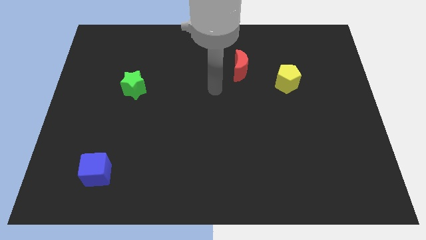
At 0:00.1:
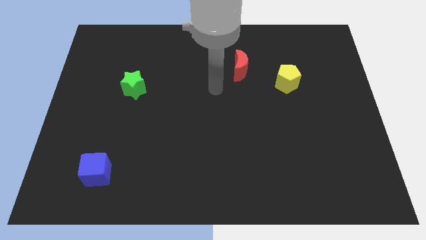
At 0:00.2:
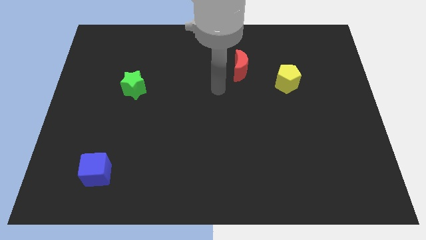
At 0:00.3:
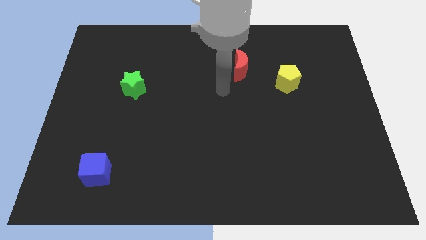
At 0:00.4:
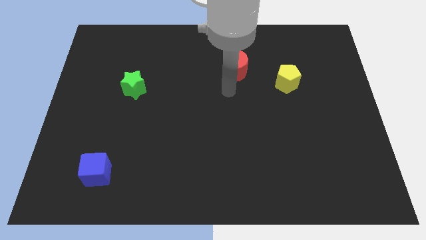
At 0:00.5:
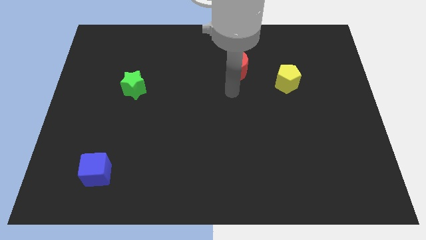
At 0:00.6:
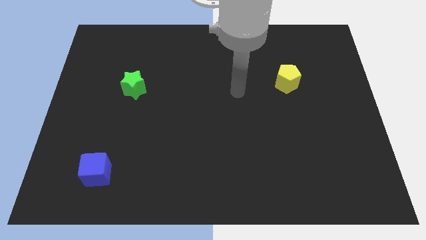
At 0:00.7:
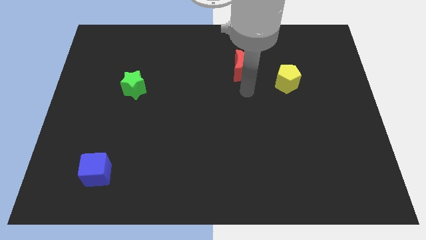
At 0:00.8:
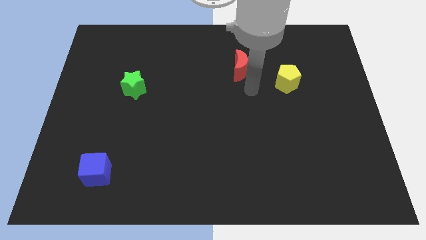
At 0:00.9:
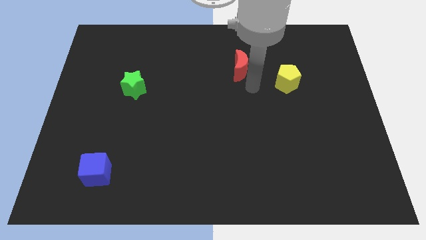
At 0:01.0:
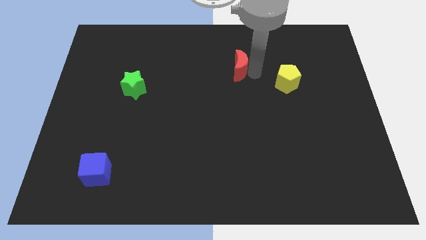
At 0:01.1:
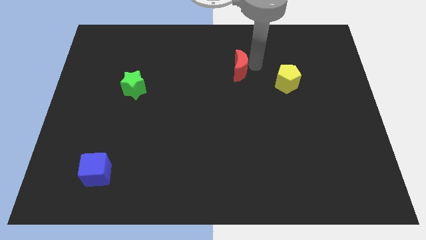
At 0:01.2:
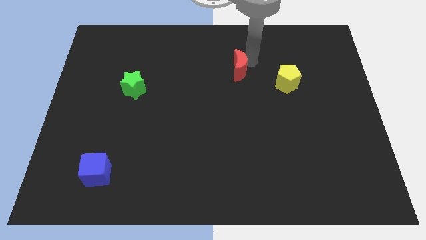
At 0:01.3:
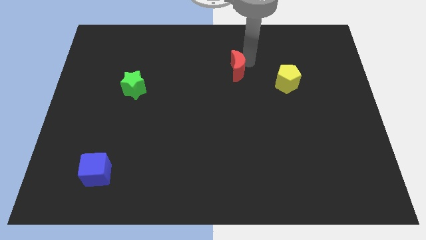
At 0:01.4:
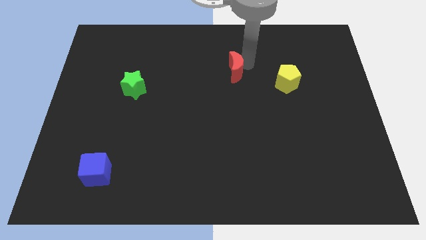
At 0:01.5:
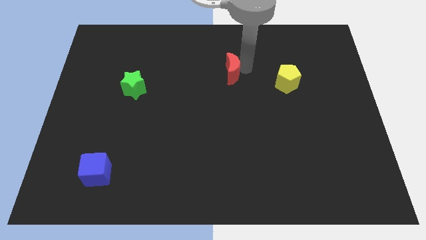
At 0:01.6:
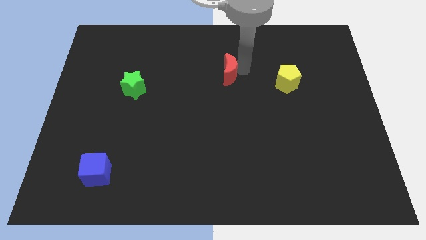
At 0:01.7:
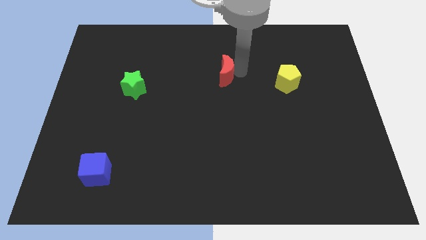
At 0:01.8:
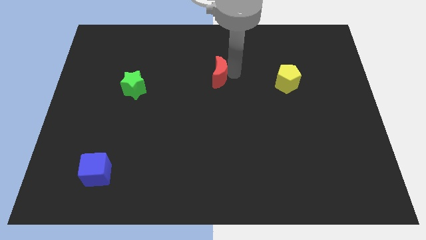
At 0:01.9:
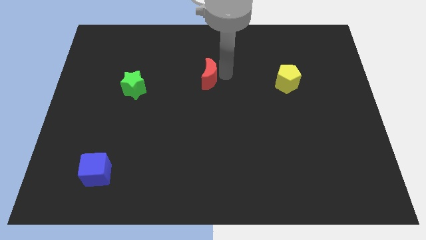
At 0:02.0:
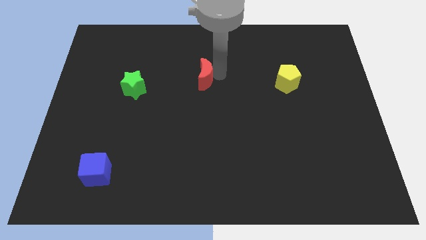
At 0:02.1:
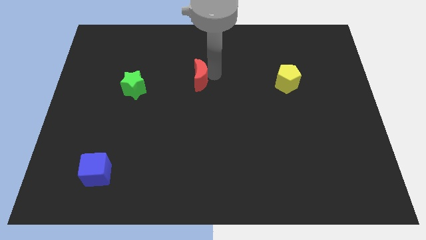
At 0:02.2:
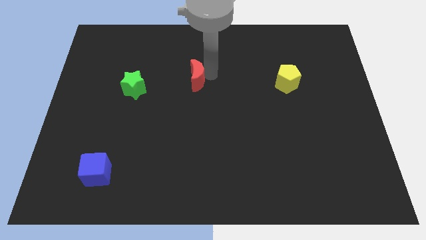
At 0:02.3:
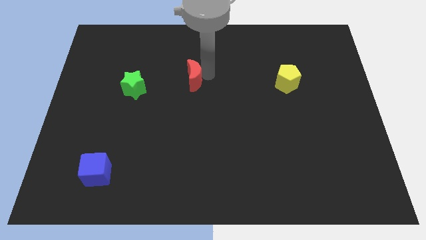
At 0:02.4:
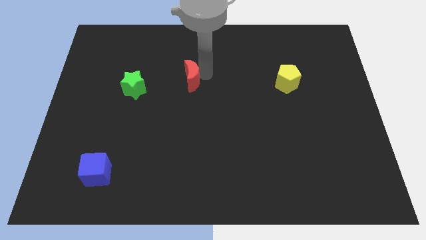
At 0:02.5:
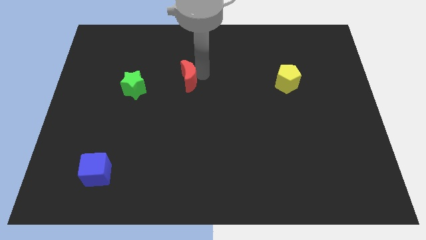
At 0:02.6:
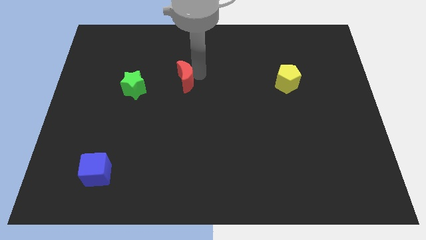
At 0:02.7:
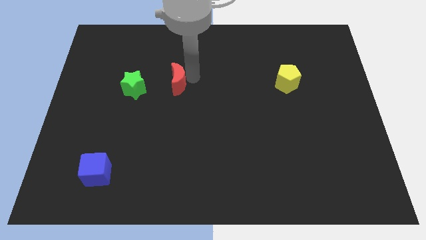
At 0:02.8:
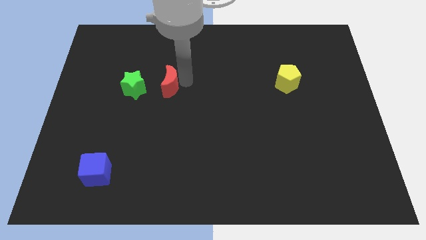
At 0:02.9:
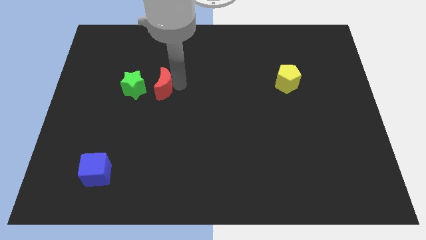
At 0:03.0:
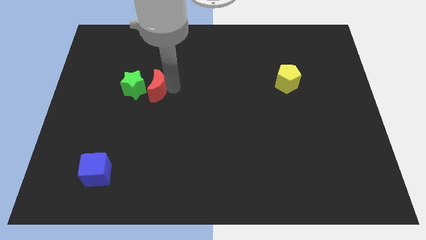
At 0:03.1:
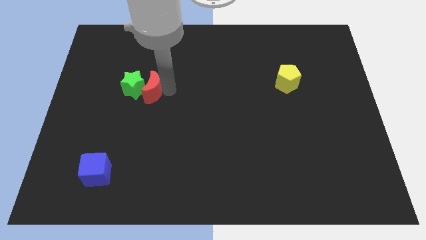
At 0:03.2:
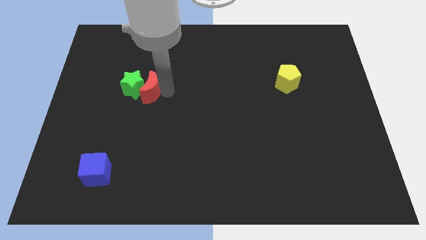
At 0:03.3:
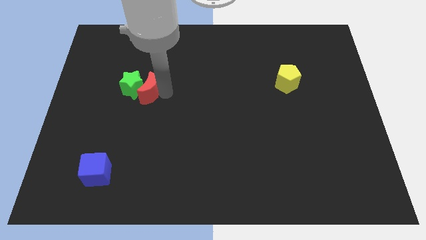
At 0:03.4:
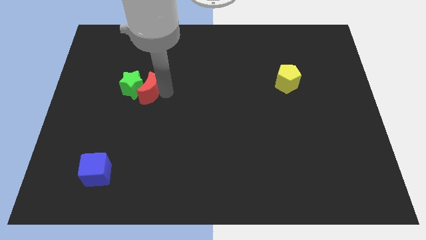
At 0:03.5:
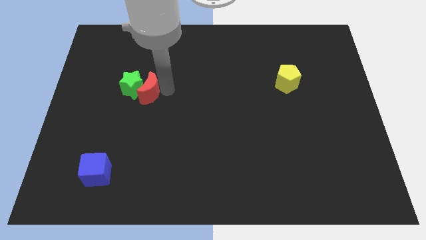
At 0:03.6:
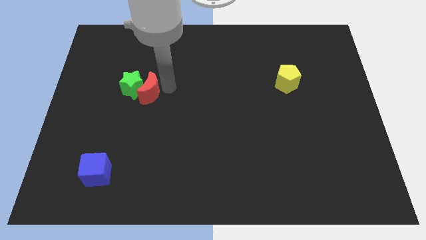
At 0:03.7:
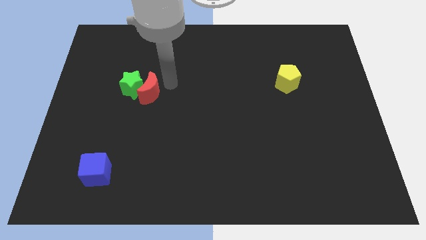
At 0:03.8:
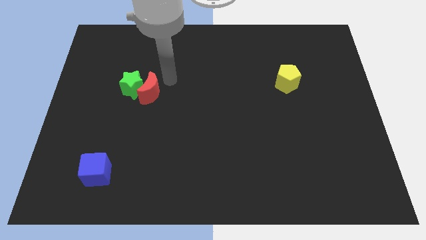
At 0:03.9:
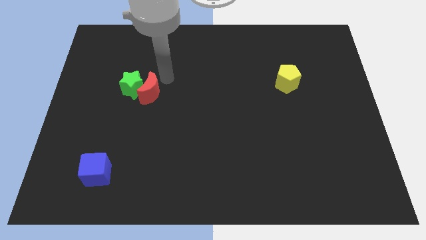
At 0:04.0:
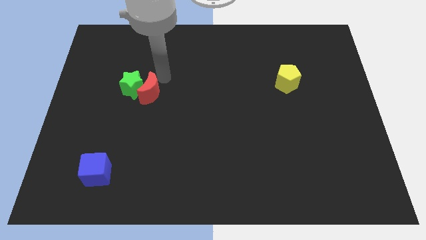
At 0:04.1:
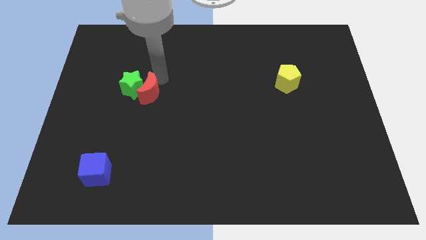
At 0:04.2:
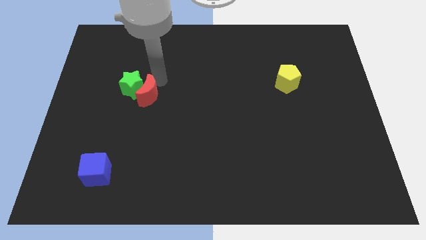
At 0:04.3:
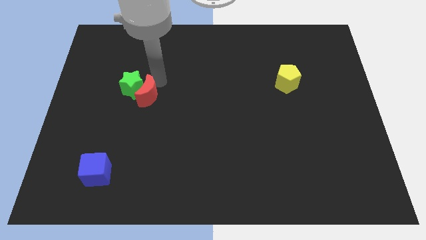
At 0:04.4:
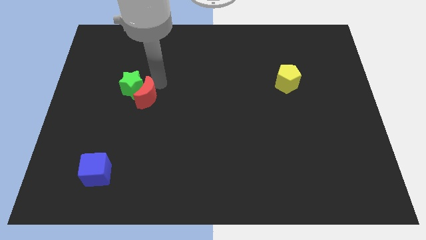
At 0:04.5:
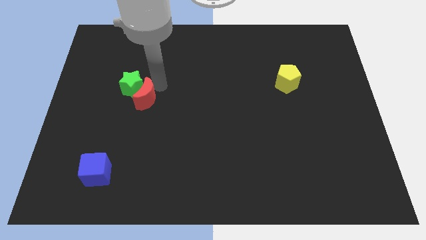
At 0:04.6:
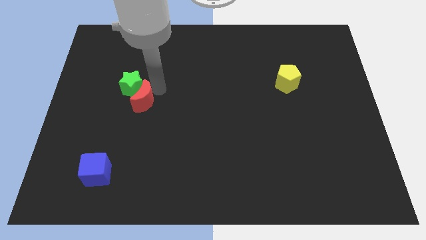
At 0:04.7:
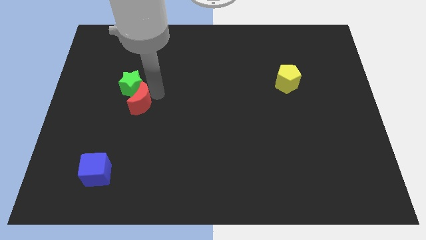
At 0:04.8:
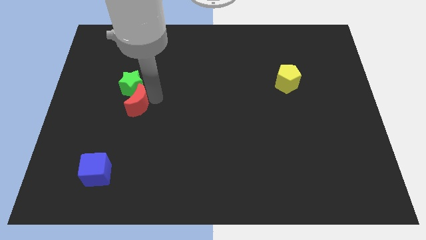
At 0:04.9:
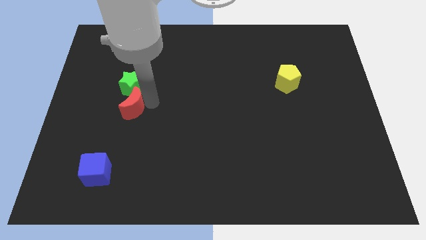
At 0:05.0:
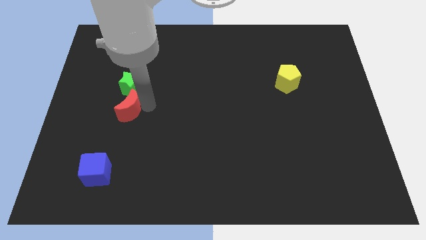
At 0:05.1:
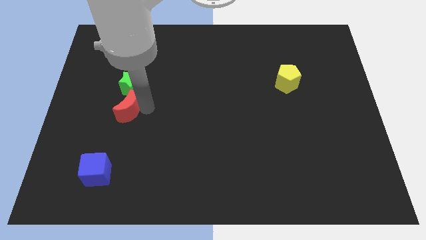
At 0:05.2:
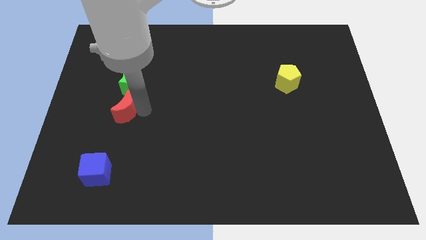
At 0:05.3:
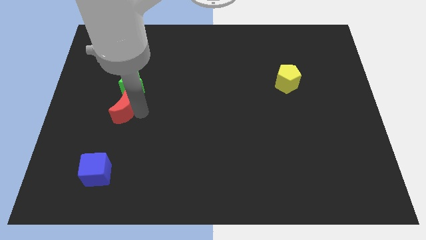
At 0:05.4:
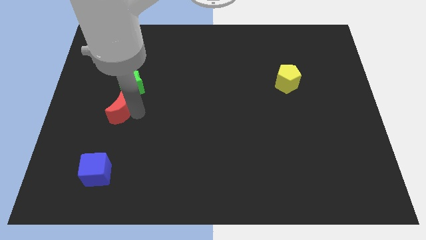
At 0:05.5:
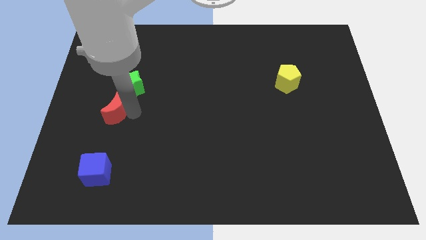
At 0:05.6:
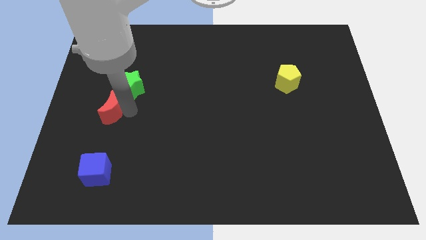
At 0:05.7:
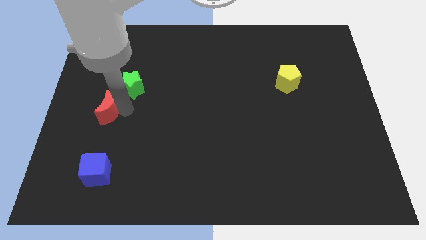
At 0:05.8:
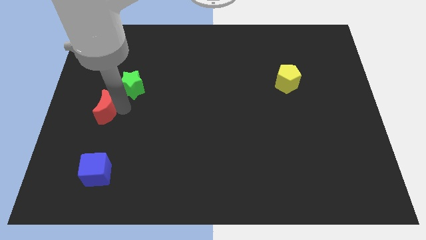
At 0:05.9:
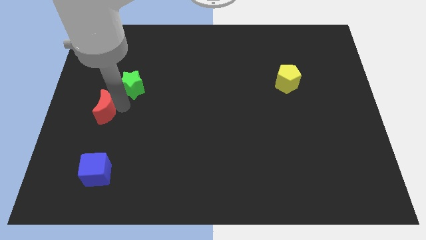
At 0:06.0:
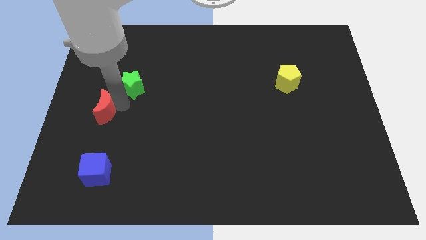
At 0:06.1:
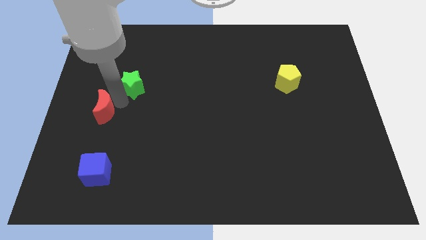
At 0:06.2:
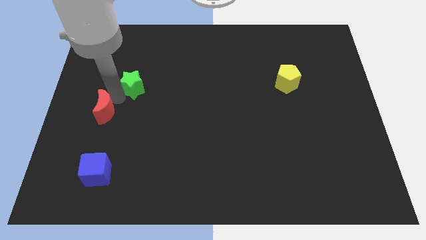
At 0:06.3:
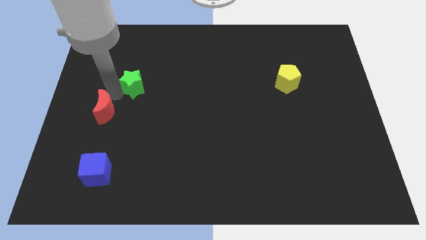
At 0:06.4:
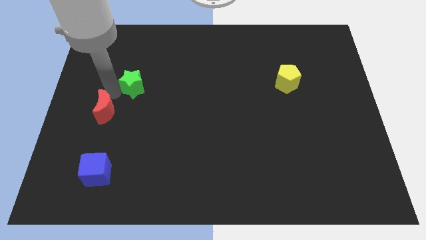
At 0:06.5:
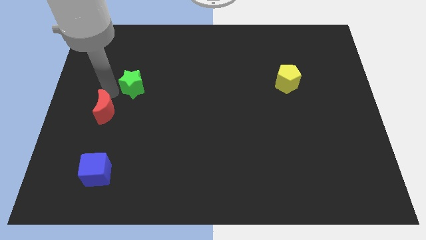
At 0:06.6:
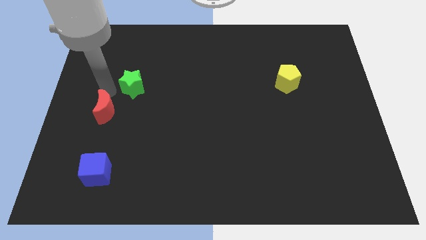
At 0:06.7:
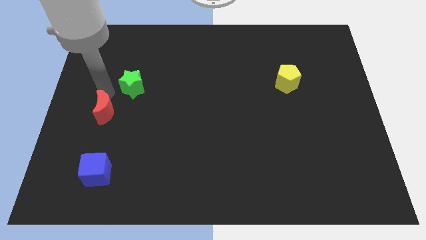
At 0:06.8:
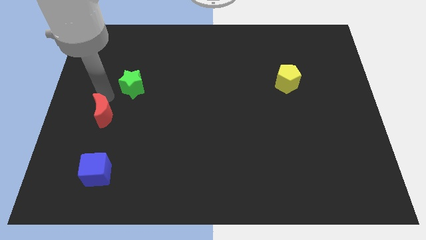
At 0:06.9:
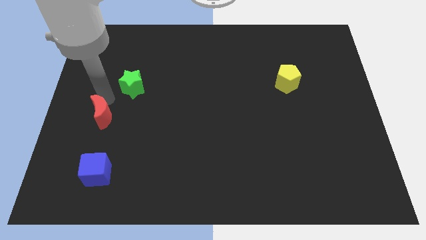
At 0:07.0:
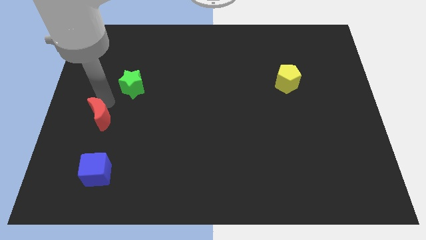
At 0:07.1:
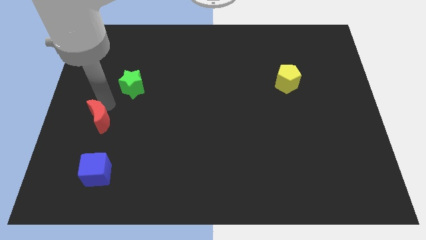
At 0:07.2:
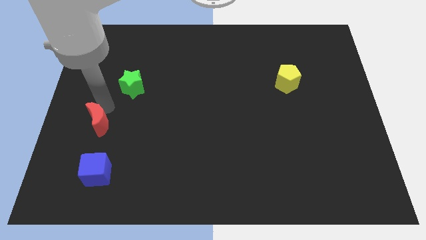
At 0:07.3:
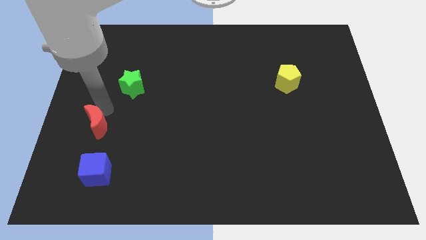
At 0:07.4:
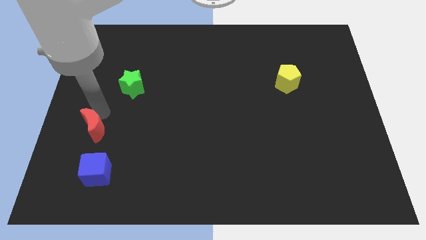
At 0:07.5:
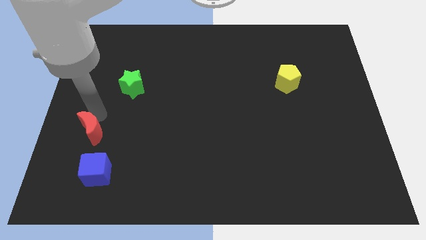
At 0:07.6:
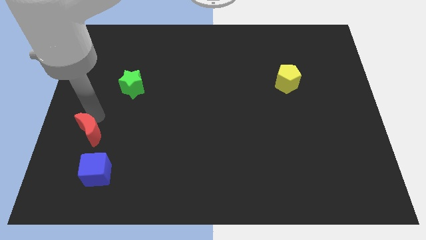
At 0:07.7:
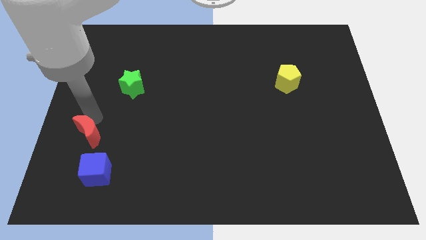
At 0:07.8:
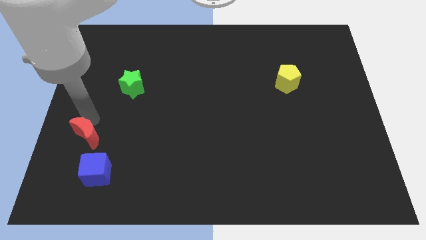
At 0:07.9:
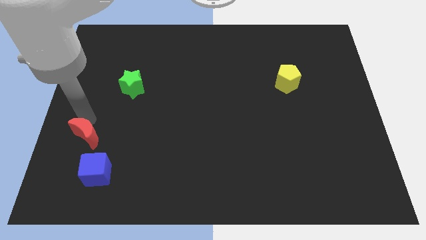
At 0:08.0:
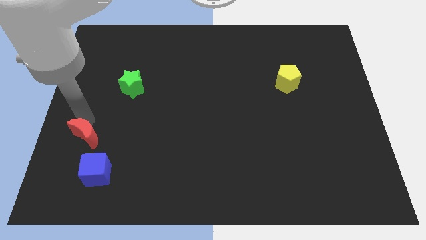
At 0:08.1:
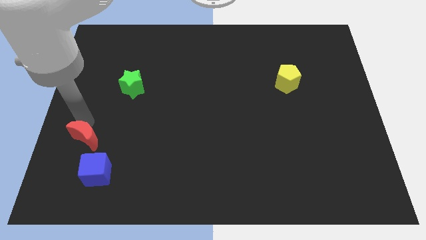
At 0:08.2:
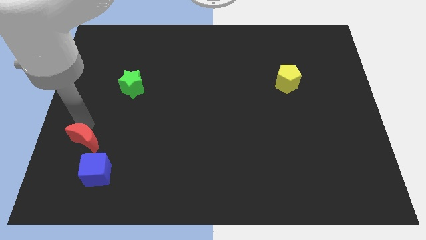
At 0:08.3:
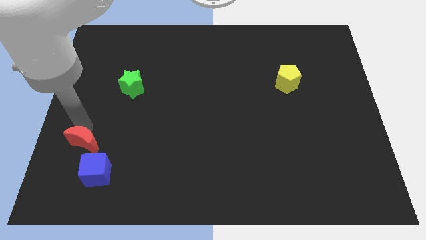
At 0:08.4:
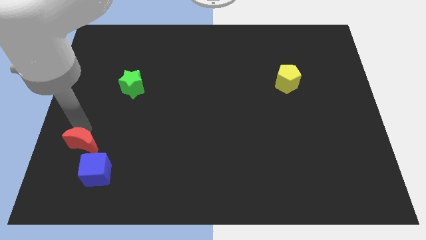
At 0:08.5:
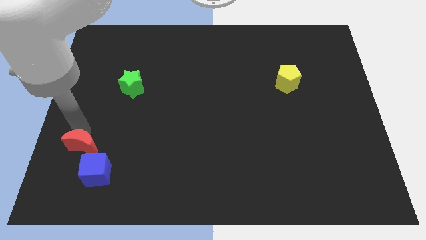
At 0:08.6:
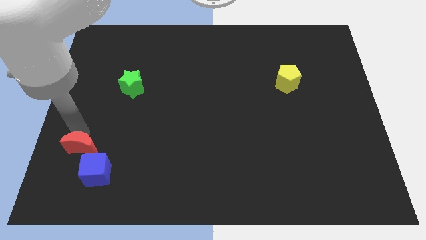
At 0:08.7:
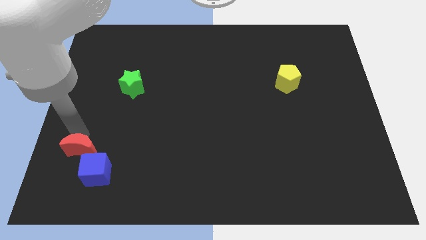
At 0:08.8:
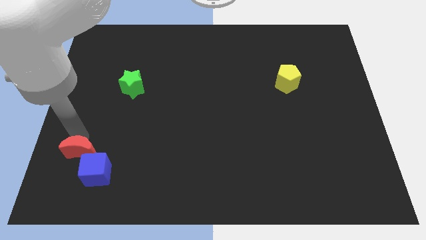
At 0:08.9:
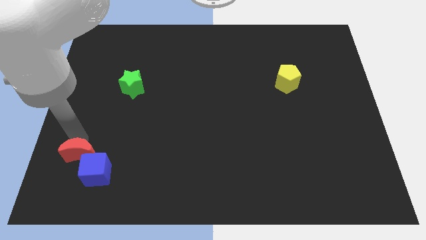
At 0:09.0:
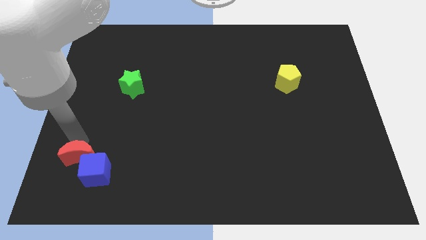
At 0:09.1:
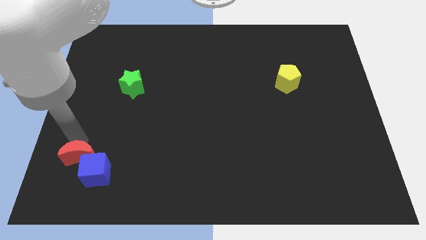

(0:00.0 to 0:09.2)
move the red block close to the cube
